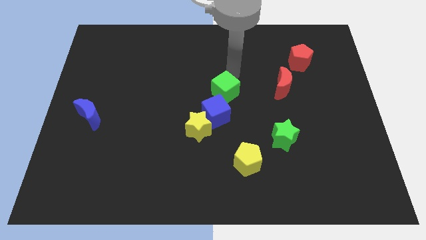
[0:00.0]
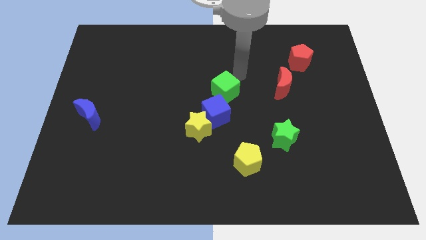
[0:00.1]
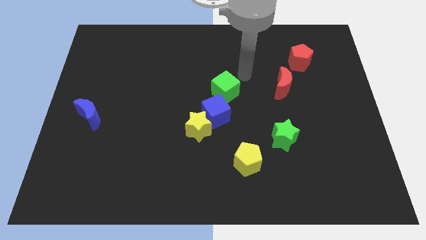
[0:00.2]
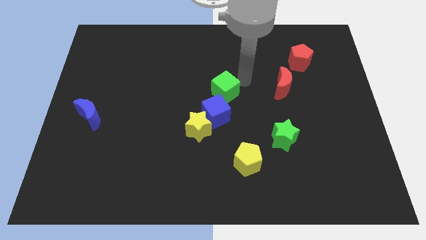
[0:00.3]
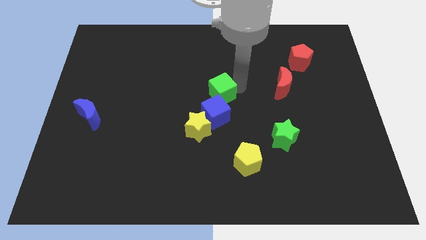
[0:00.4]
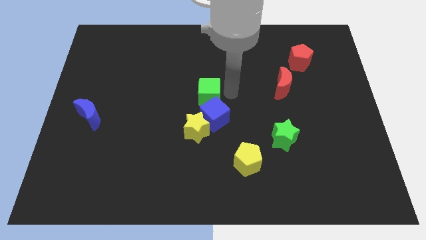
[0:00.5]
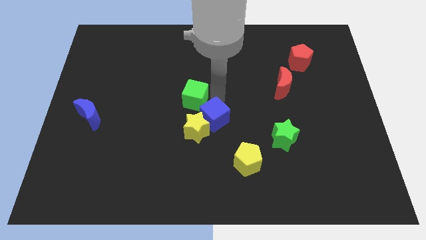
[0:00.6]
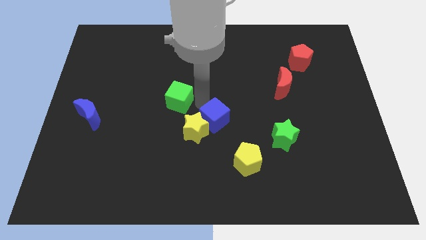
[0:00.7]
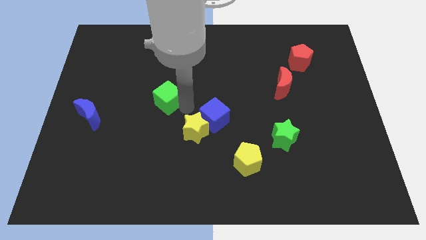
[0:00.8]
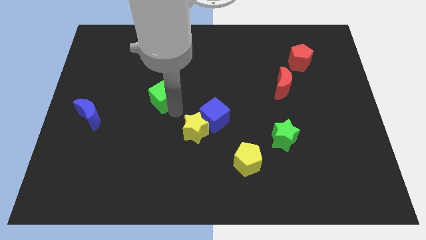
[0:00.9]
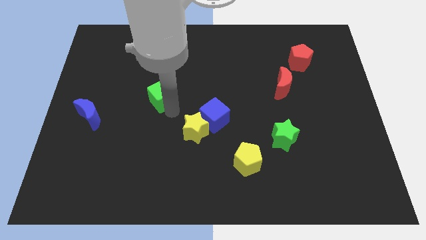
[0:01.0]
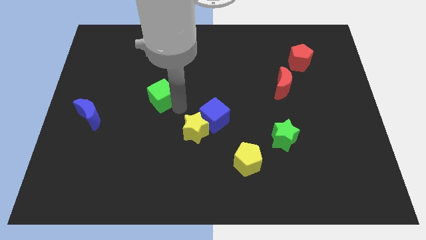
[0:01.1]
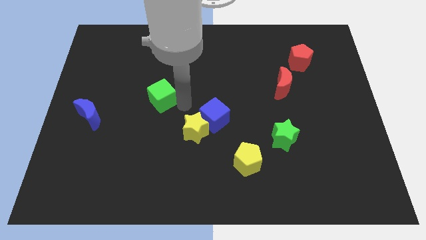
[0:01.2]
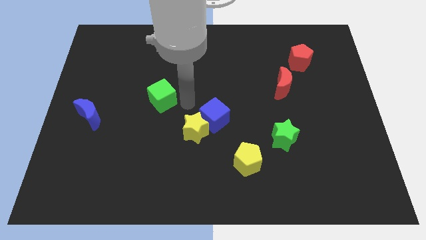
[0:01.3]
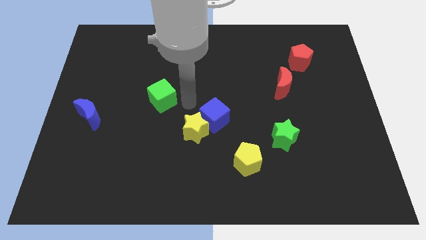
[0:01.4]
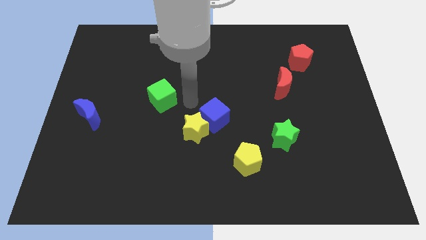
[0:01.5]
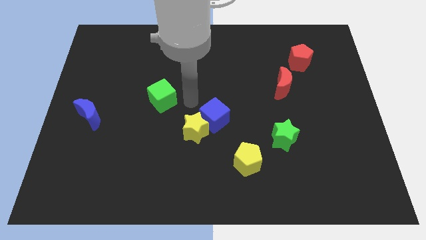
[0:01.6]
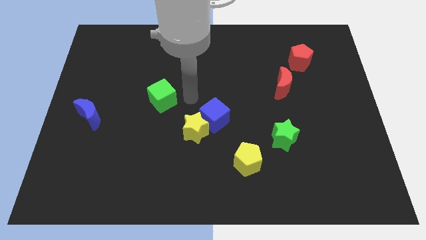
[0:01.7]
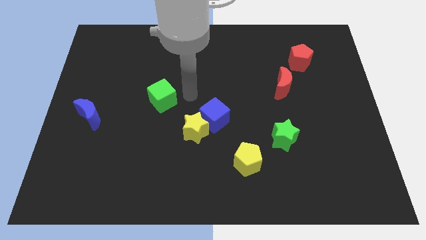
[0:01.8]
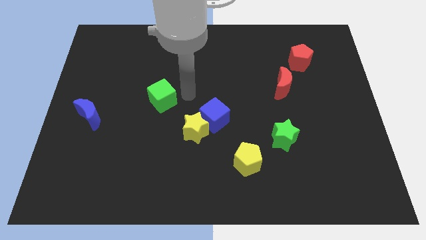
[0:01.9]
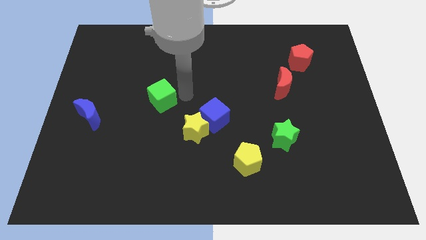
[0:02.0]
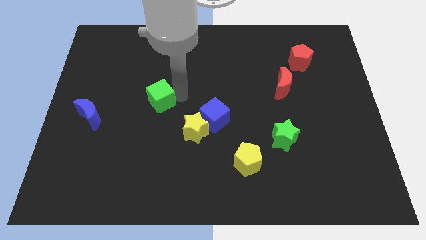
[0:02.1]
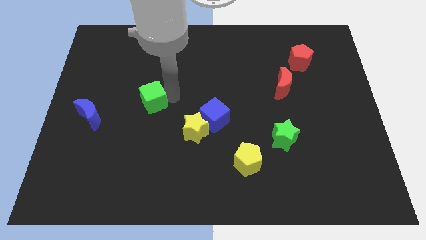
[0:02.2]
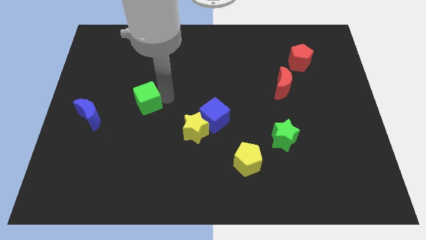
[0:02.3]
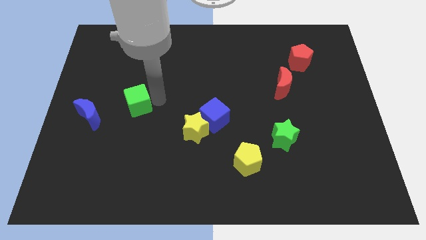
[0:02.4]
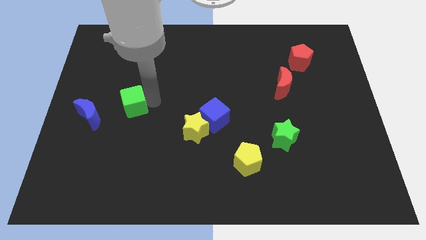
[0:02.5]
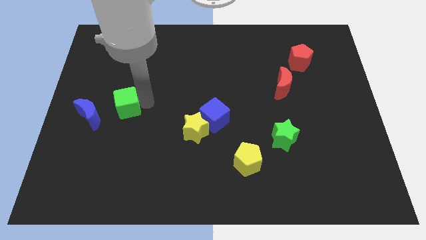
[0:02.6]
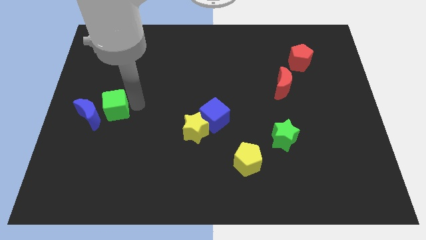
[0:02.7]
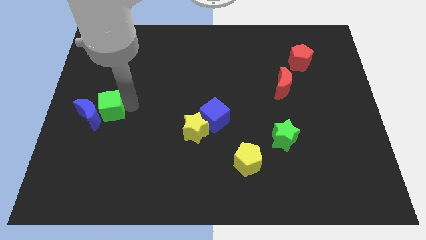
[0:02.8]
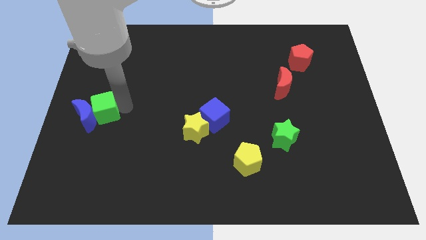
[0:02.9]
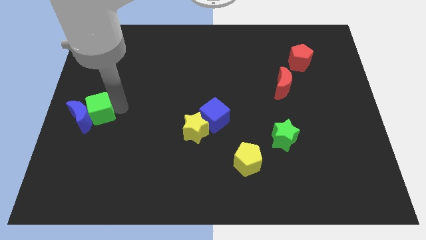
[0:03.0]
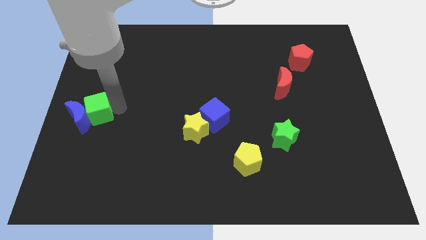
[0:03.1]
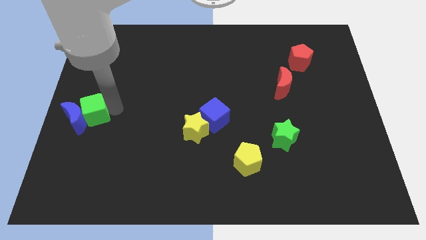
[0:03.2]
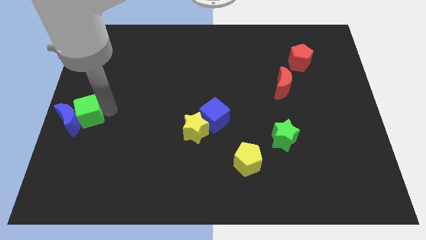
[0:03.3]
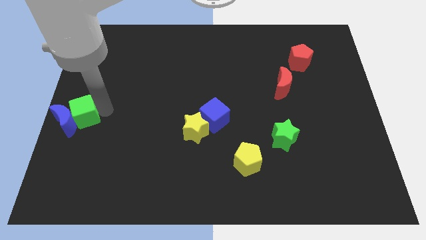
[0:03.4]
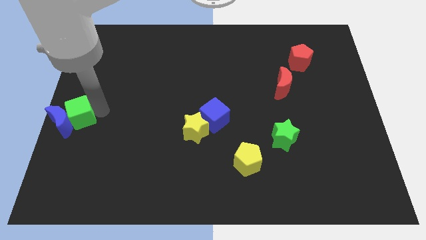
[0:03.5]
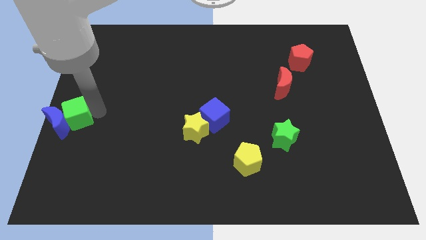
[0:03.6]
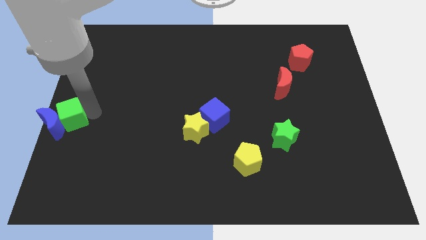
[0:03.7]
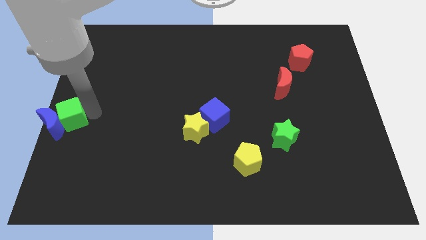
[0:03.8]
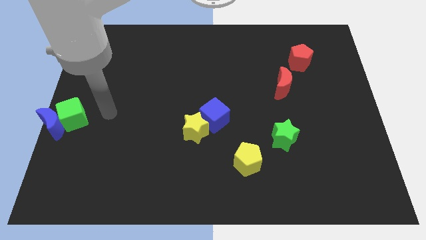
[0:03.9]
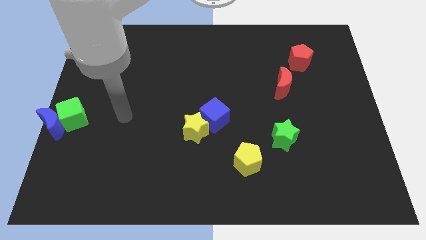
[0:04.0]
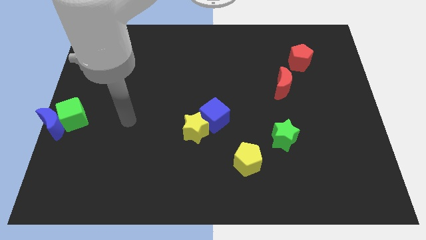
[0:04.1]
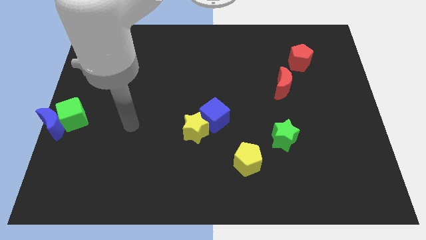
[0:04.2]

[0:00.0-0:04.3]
push the green cube into the blue moon

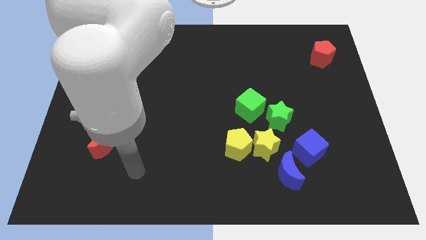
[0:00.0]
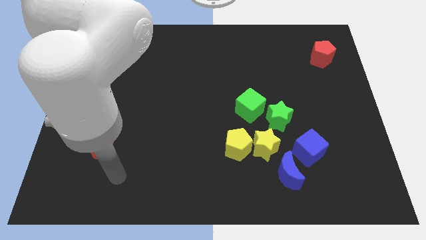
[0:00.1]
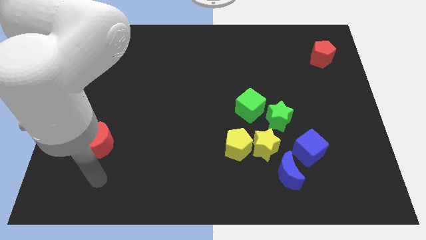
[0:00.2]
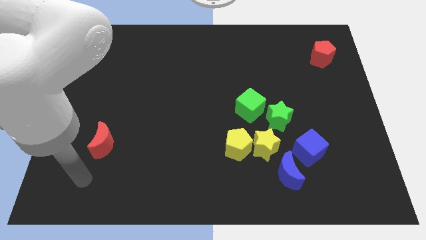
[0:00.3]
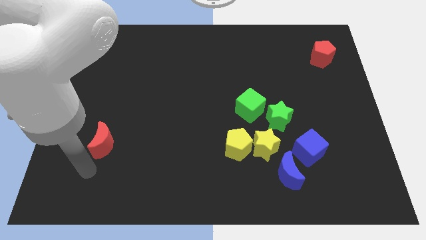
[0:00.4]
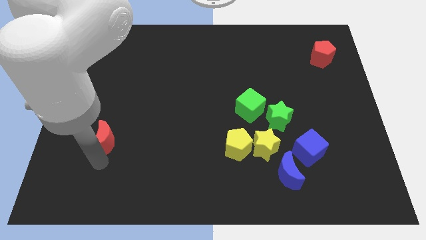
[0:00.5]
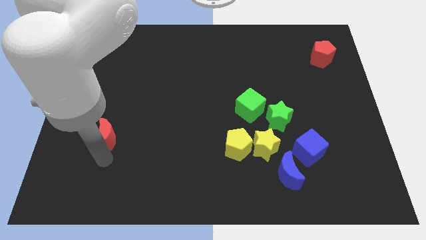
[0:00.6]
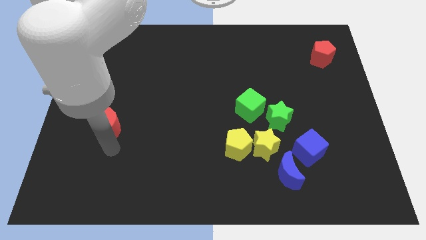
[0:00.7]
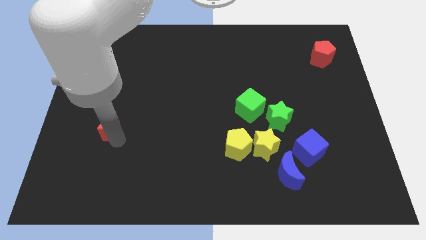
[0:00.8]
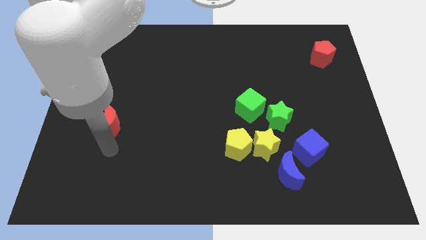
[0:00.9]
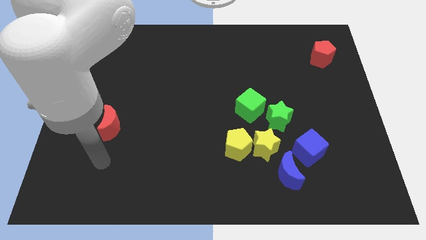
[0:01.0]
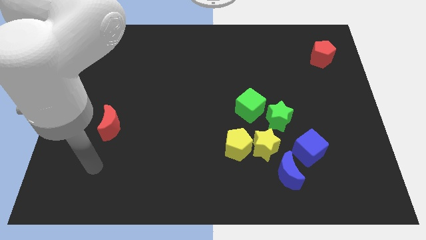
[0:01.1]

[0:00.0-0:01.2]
move the red crescent slightly to the top of the board

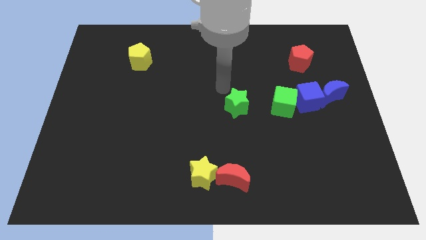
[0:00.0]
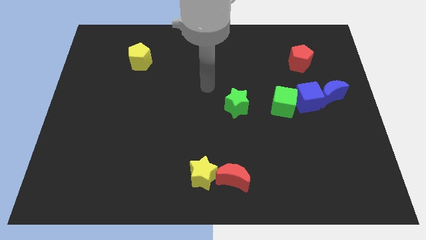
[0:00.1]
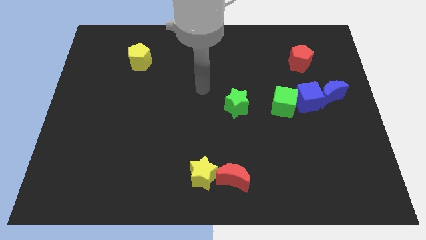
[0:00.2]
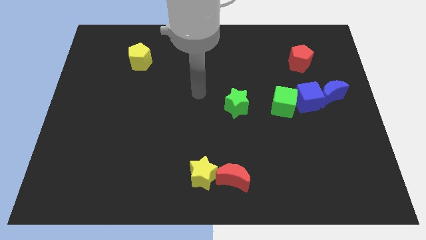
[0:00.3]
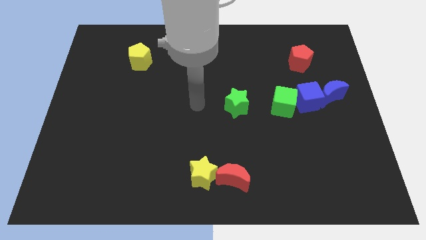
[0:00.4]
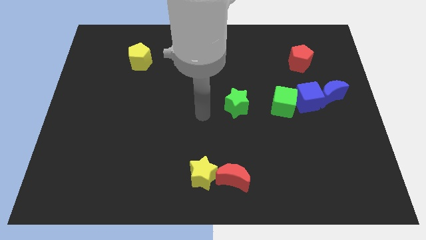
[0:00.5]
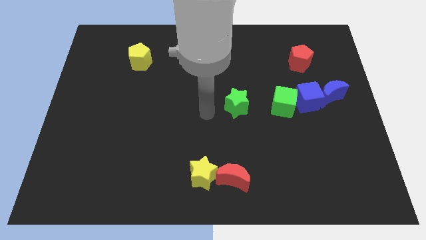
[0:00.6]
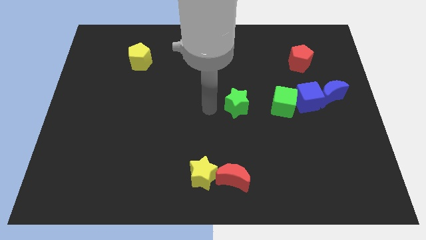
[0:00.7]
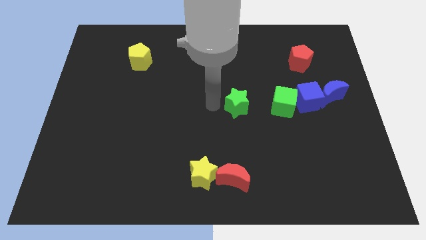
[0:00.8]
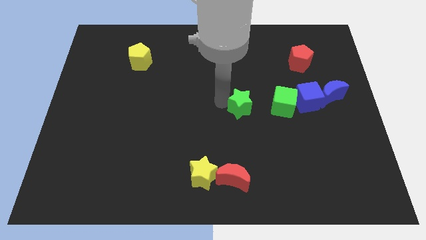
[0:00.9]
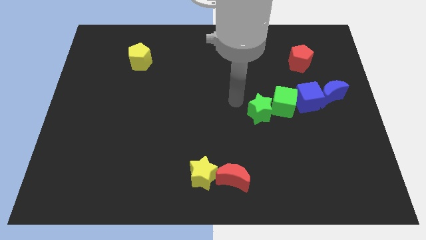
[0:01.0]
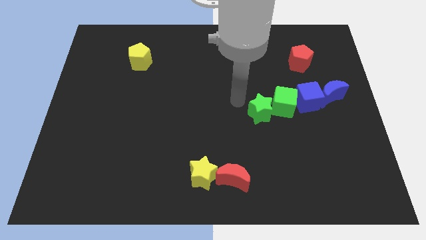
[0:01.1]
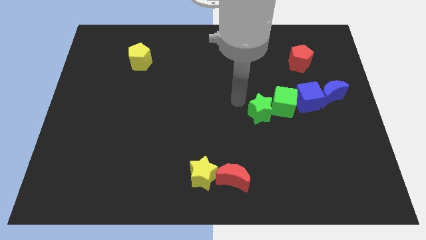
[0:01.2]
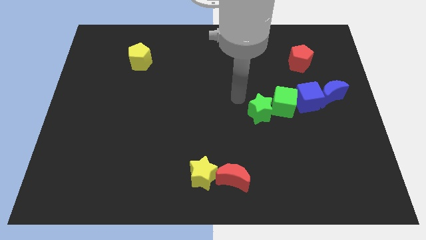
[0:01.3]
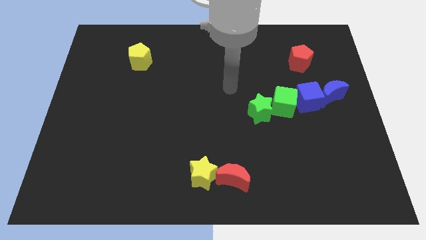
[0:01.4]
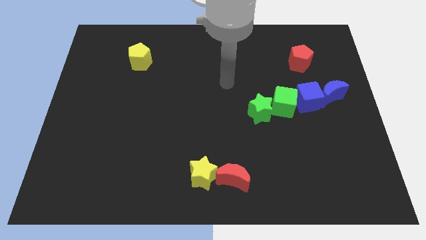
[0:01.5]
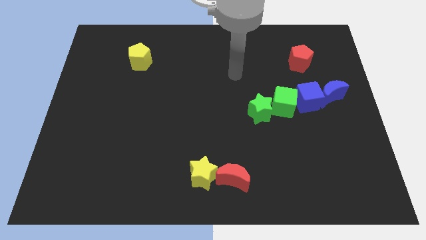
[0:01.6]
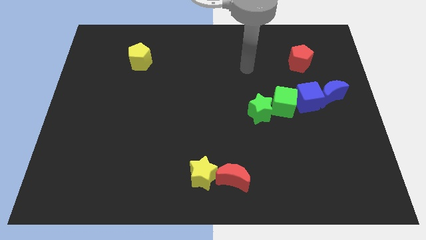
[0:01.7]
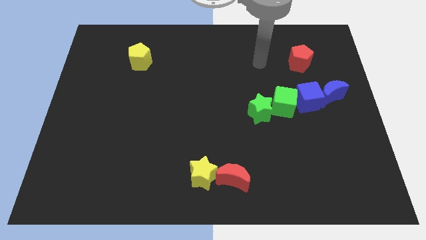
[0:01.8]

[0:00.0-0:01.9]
move the green star into the green cube

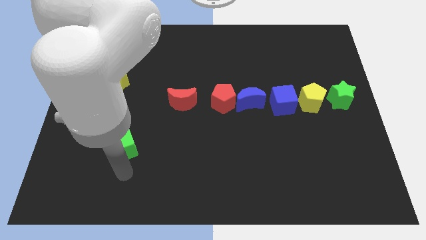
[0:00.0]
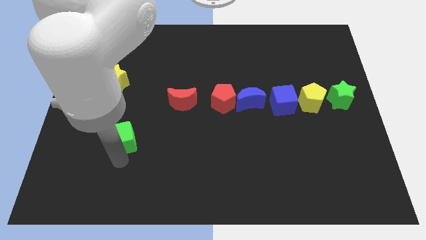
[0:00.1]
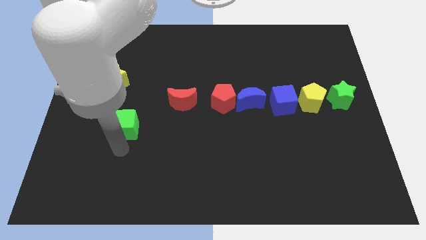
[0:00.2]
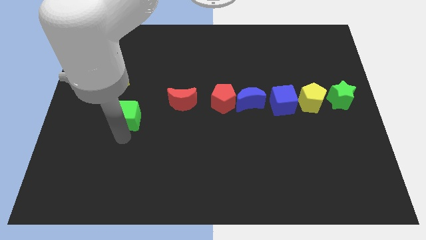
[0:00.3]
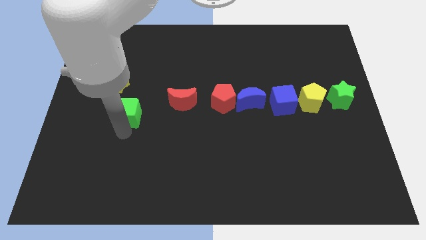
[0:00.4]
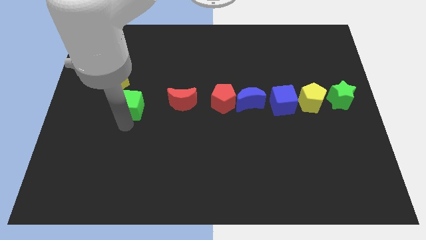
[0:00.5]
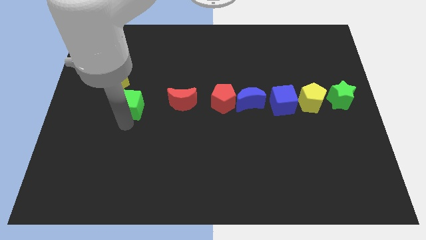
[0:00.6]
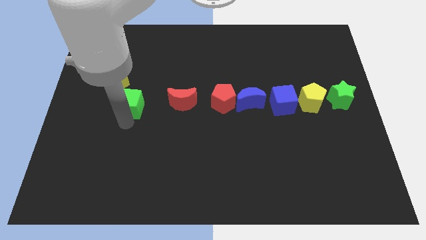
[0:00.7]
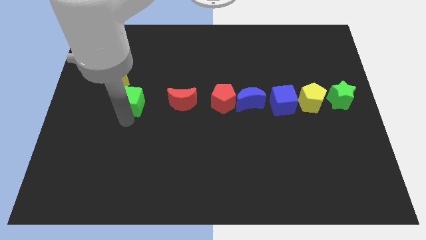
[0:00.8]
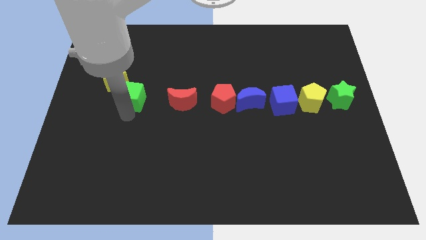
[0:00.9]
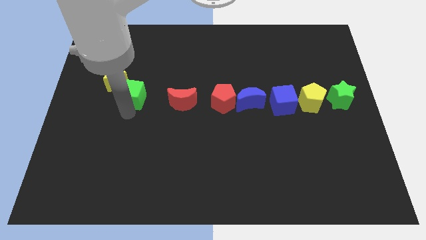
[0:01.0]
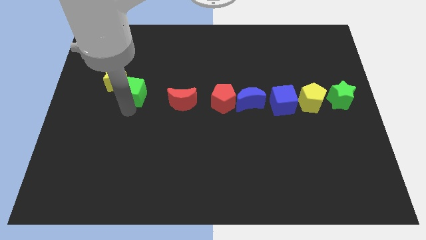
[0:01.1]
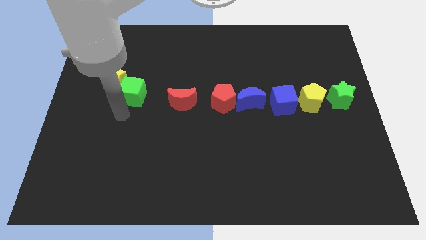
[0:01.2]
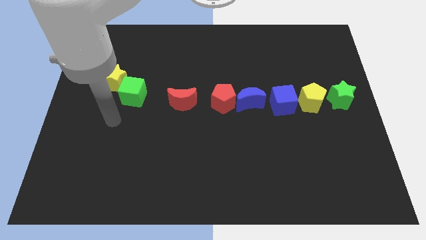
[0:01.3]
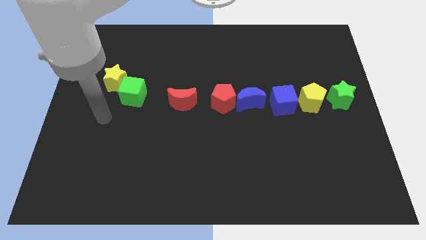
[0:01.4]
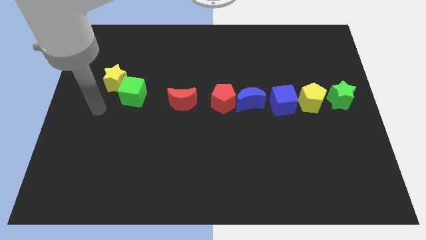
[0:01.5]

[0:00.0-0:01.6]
place the green cube close to yellow star
